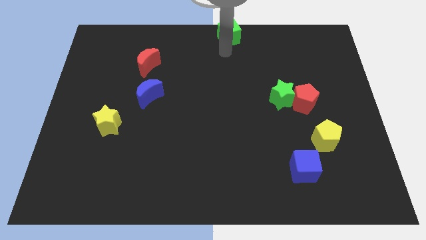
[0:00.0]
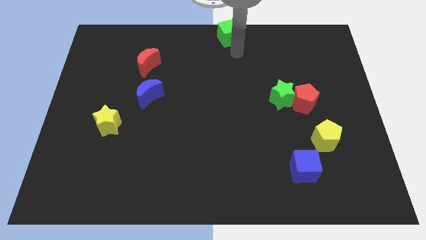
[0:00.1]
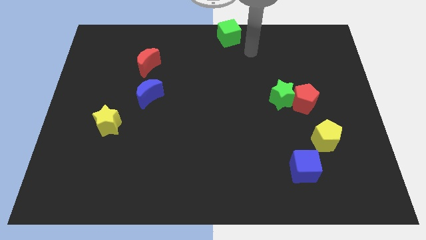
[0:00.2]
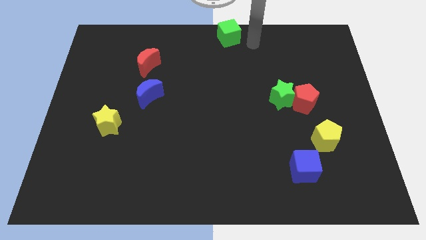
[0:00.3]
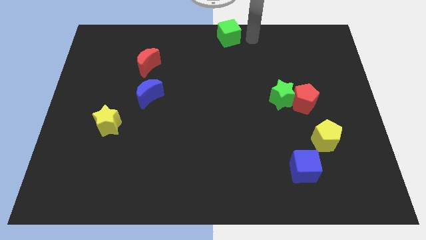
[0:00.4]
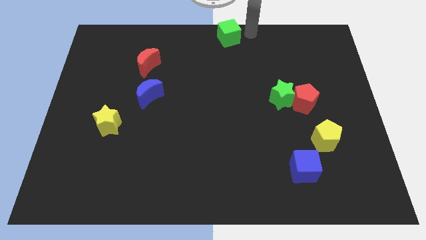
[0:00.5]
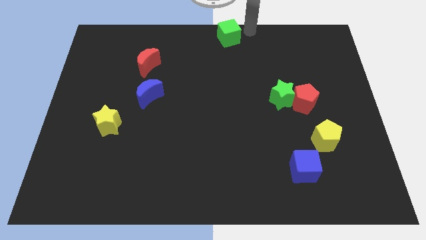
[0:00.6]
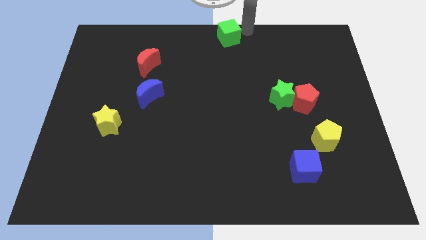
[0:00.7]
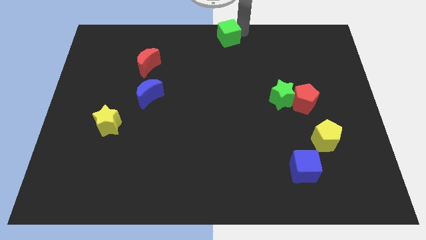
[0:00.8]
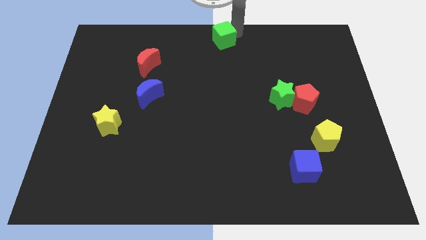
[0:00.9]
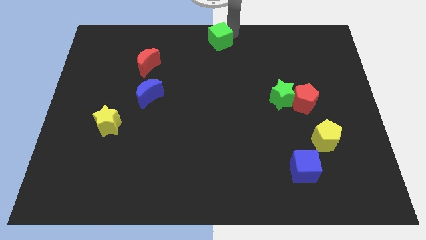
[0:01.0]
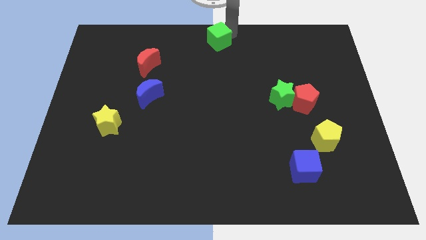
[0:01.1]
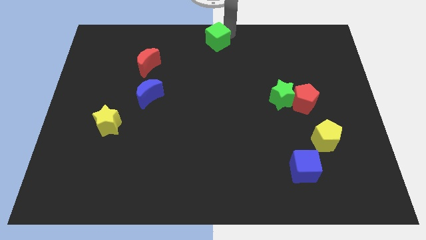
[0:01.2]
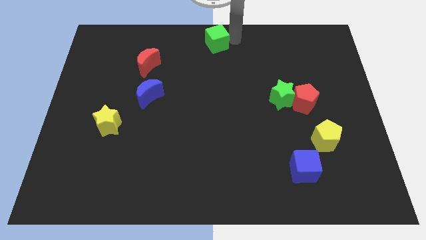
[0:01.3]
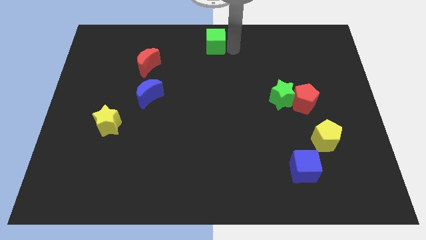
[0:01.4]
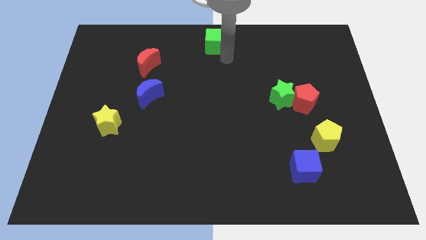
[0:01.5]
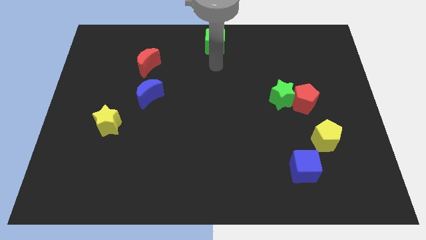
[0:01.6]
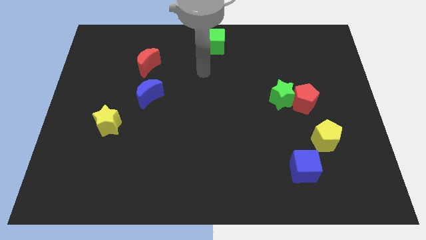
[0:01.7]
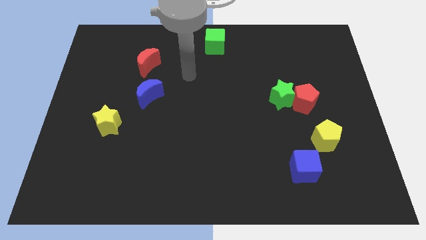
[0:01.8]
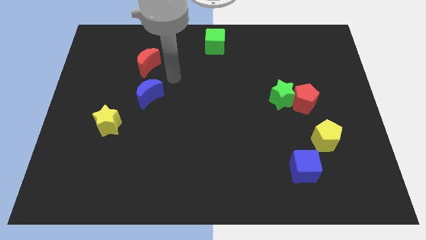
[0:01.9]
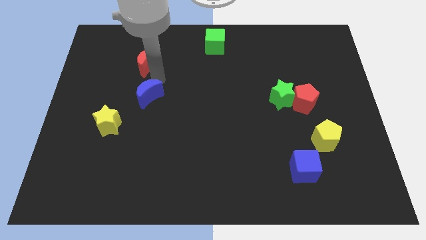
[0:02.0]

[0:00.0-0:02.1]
slightly adjust the green cube to the top center

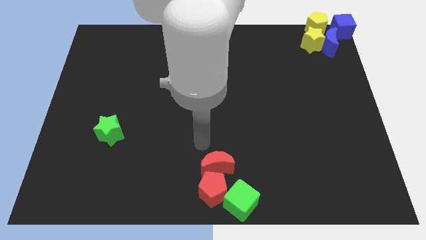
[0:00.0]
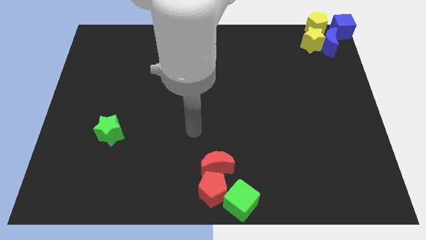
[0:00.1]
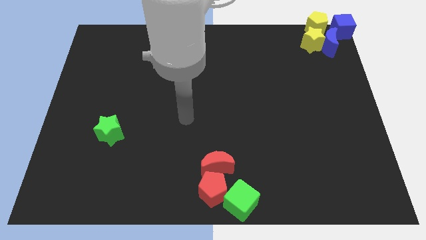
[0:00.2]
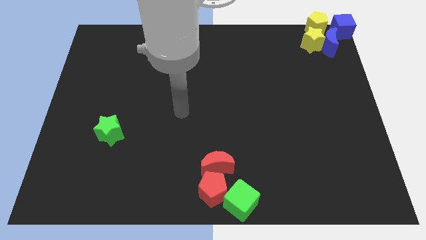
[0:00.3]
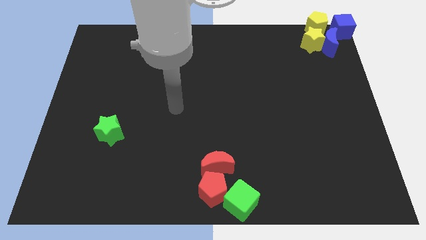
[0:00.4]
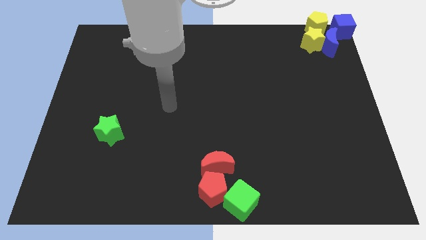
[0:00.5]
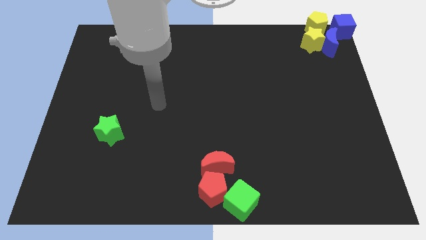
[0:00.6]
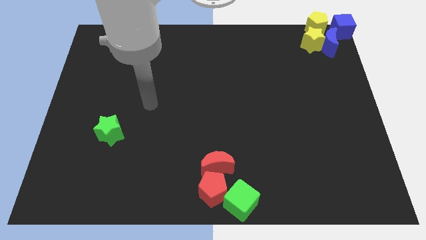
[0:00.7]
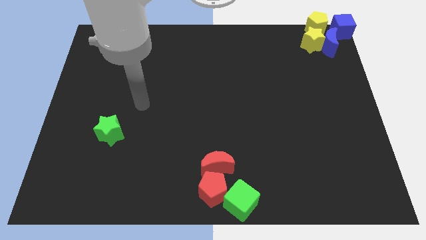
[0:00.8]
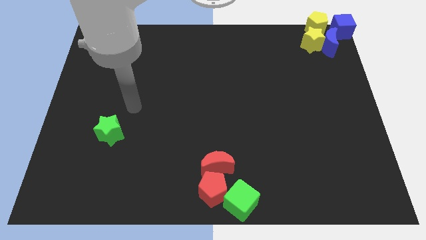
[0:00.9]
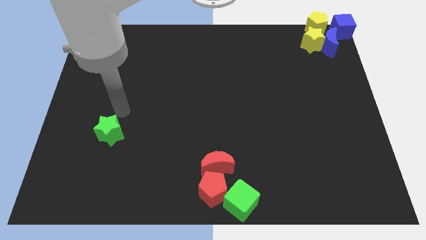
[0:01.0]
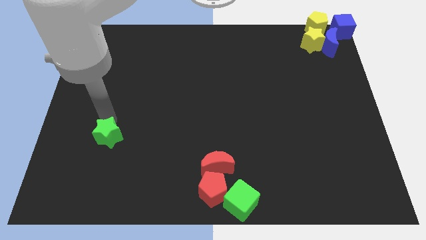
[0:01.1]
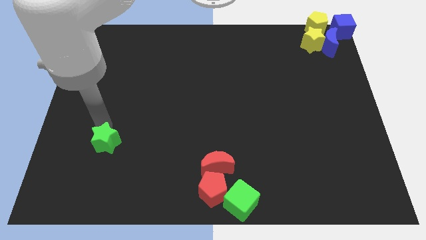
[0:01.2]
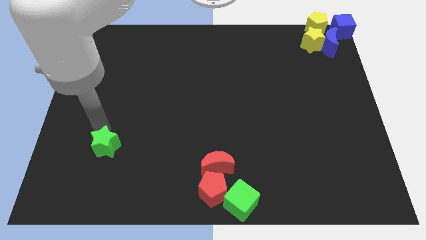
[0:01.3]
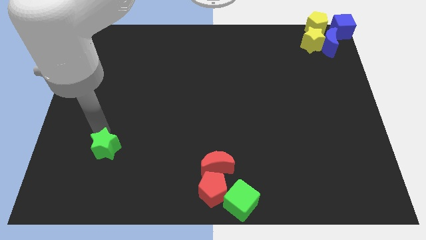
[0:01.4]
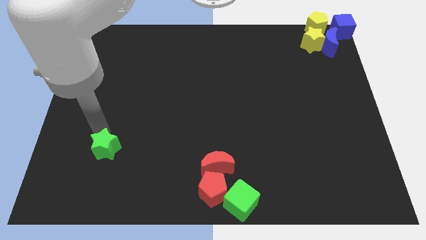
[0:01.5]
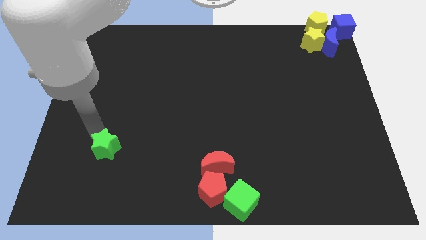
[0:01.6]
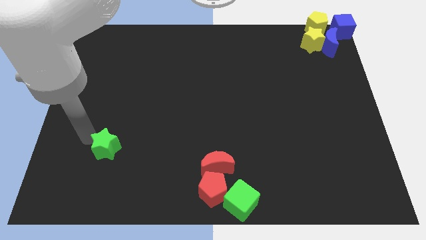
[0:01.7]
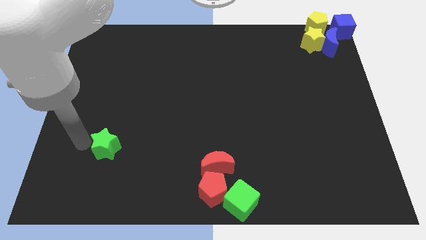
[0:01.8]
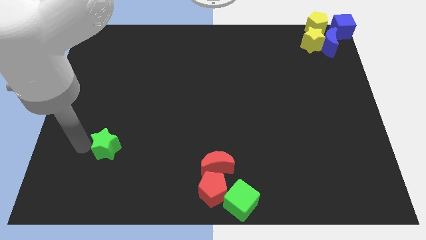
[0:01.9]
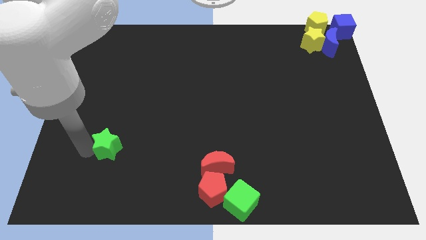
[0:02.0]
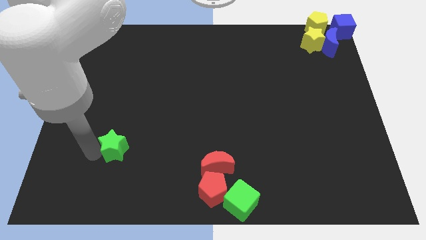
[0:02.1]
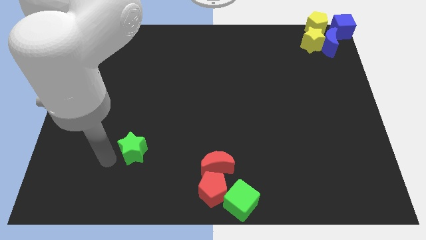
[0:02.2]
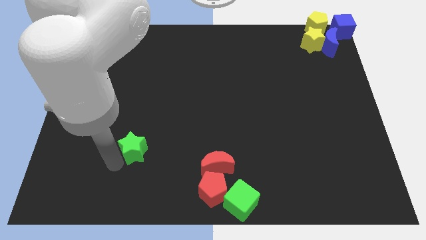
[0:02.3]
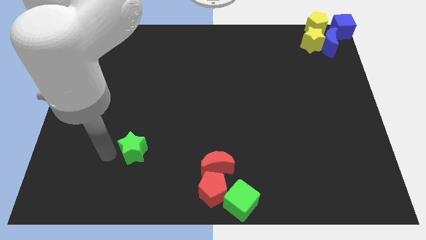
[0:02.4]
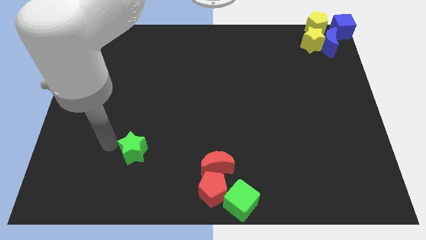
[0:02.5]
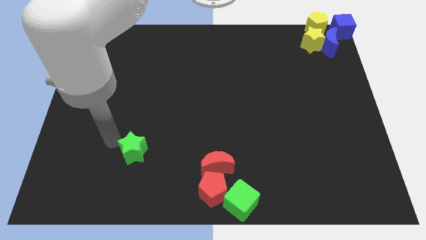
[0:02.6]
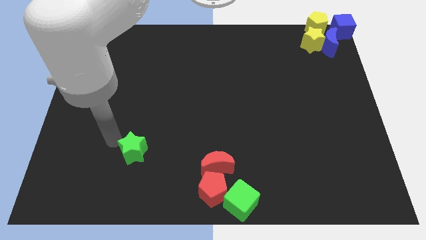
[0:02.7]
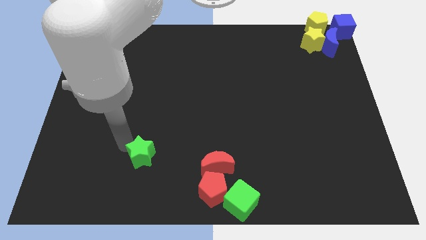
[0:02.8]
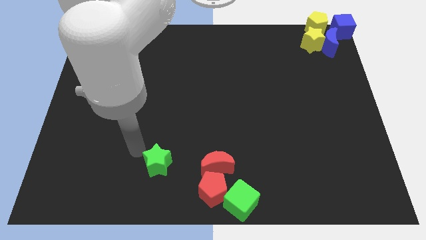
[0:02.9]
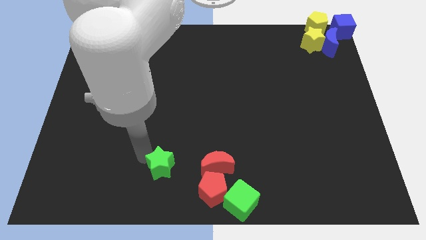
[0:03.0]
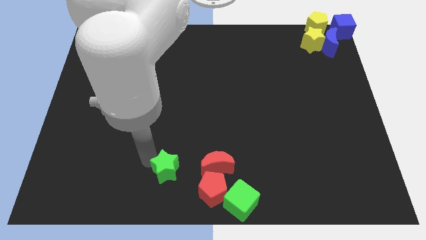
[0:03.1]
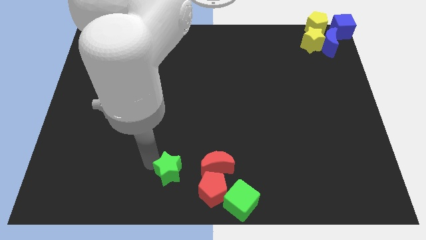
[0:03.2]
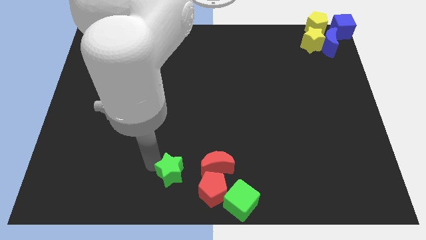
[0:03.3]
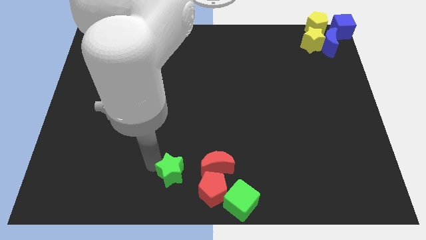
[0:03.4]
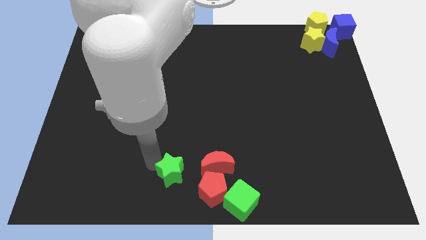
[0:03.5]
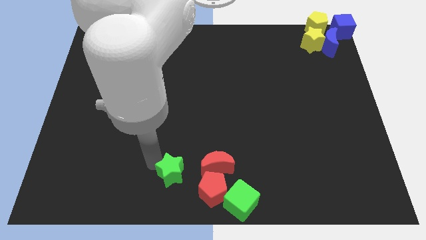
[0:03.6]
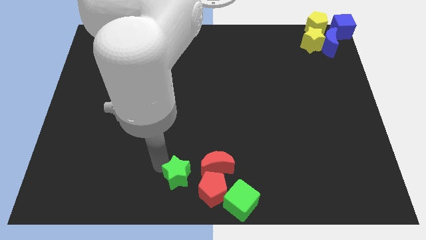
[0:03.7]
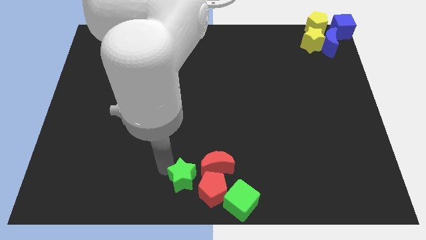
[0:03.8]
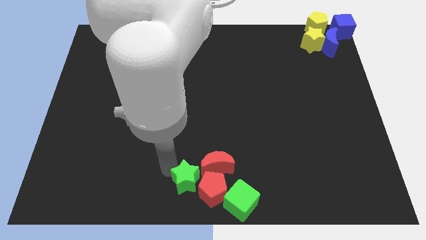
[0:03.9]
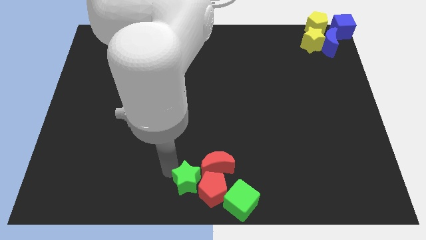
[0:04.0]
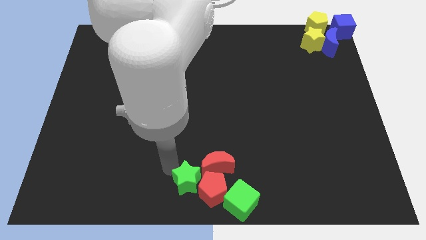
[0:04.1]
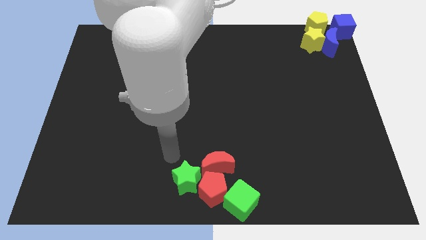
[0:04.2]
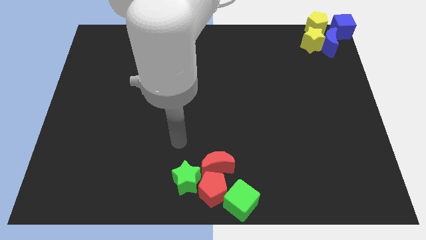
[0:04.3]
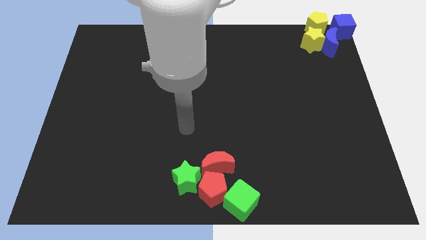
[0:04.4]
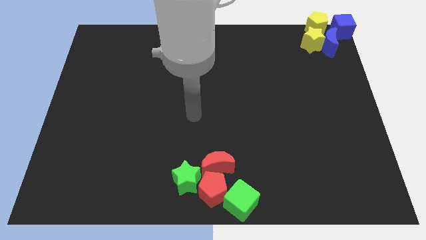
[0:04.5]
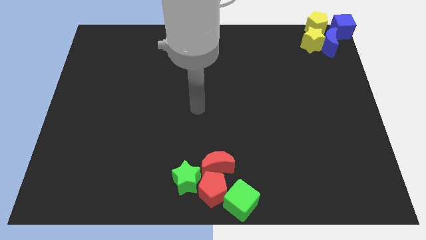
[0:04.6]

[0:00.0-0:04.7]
slide the green star to the group of red blocks

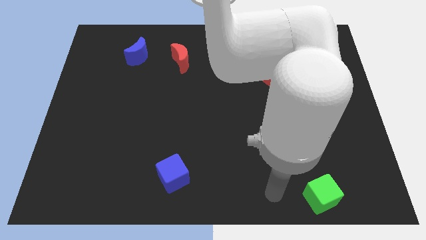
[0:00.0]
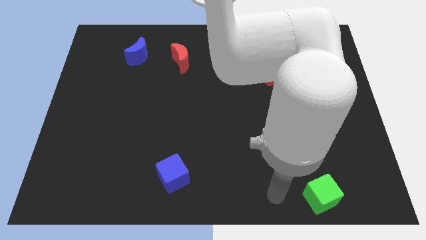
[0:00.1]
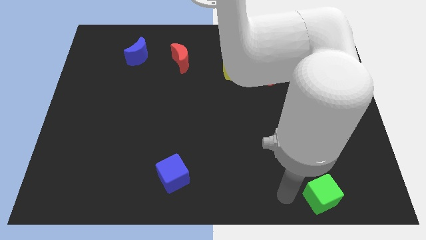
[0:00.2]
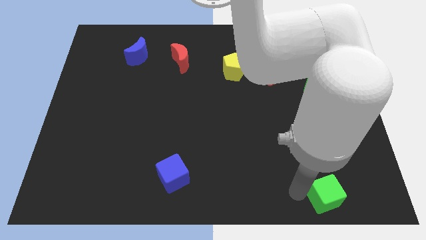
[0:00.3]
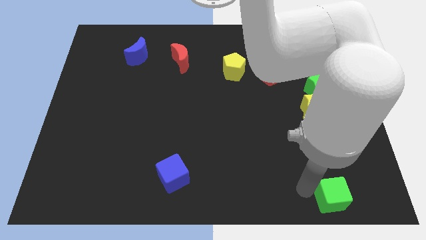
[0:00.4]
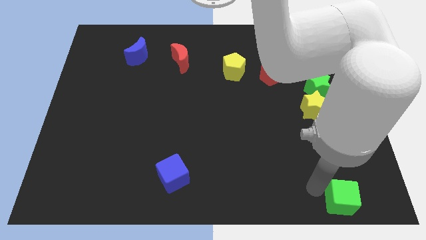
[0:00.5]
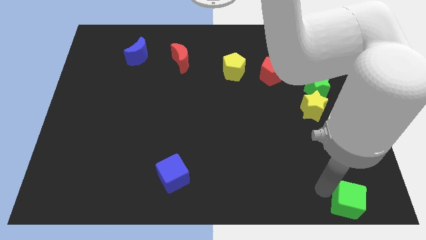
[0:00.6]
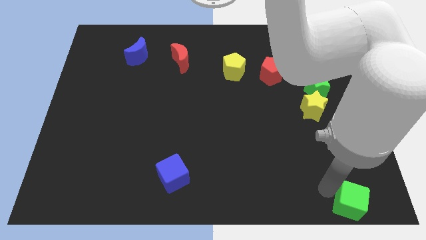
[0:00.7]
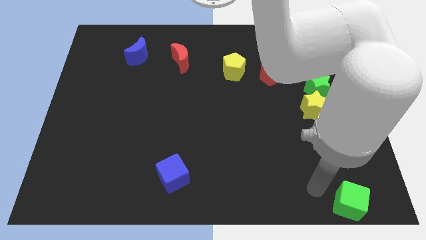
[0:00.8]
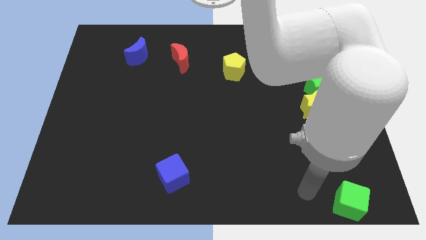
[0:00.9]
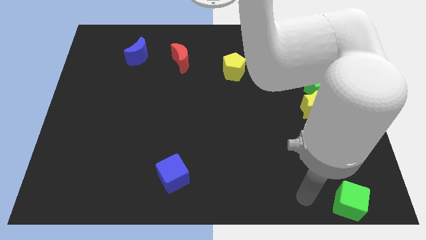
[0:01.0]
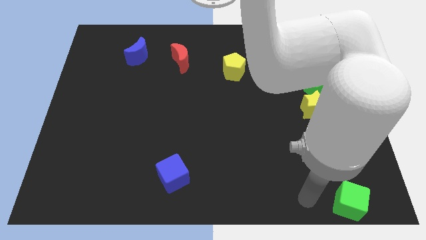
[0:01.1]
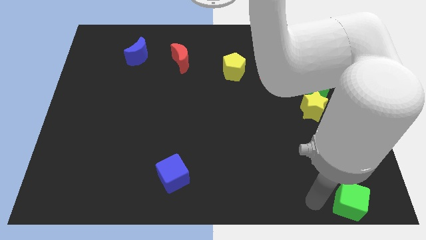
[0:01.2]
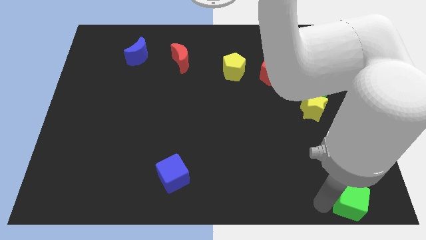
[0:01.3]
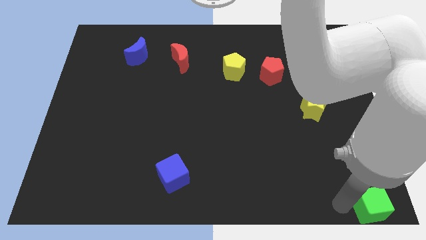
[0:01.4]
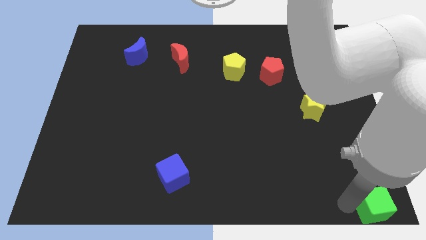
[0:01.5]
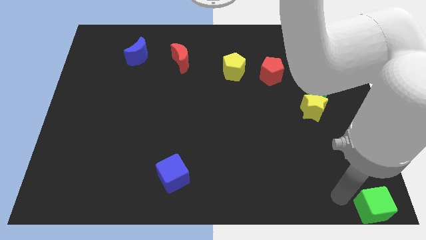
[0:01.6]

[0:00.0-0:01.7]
move the green cube diagonally bottom right to the yellow star

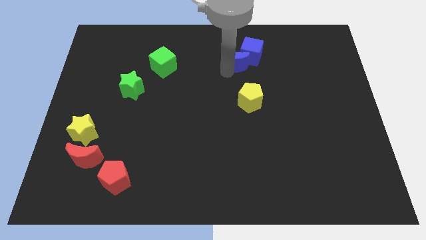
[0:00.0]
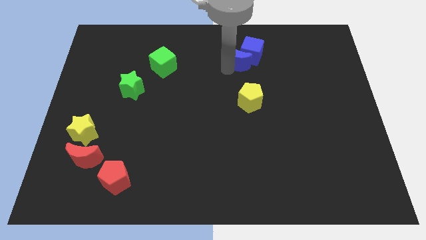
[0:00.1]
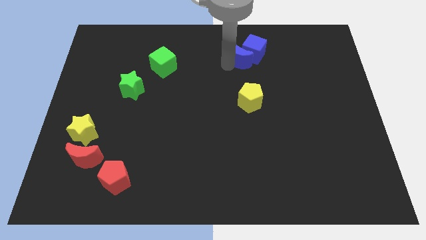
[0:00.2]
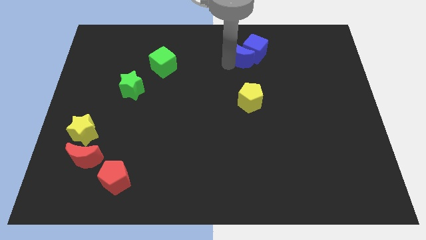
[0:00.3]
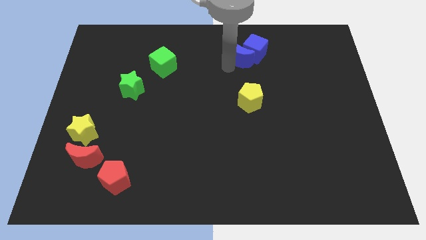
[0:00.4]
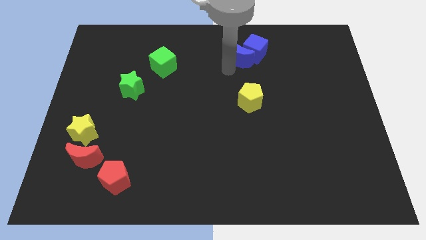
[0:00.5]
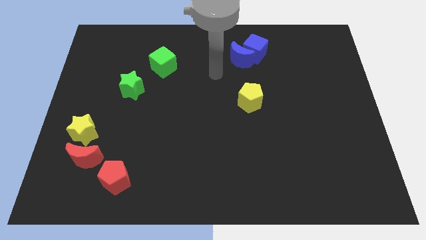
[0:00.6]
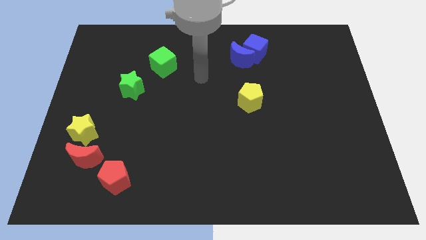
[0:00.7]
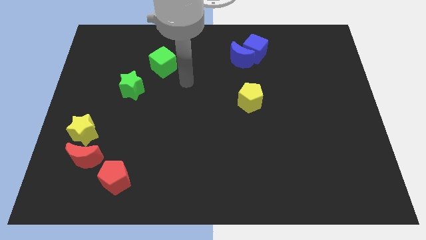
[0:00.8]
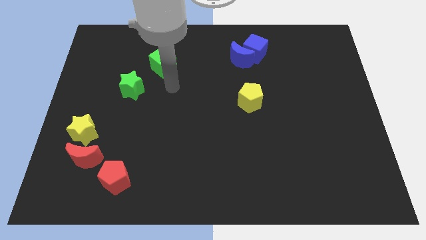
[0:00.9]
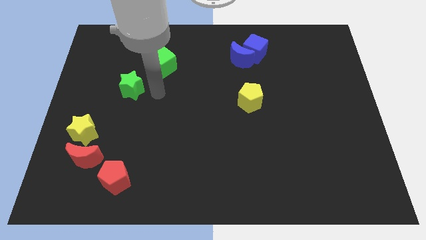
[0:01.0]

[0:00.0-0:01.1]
move your arm to the right of green star
